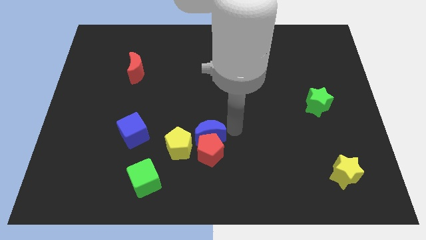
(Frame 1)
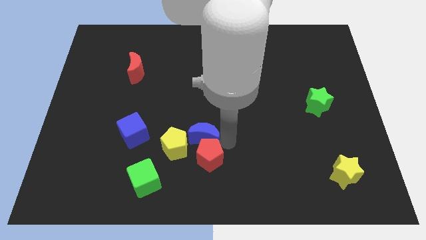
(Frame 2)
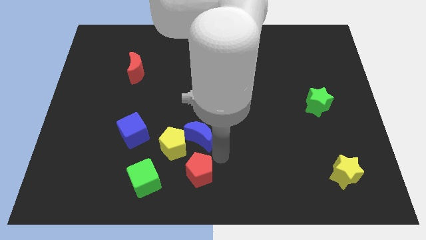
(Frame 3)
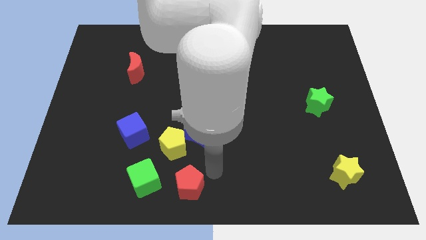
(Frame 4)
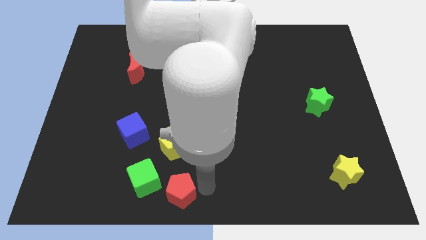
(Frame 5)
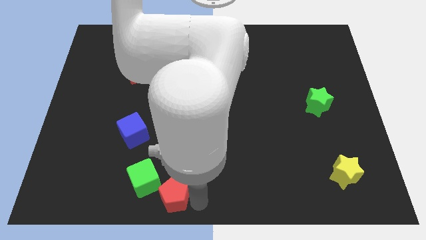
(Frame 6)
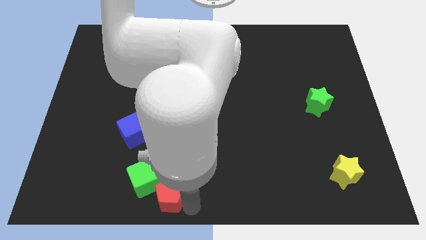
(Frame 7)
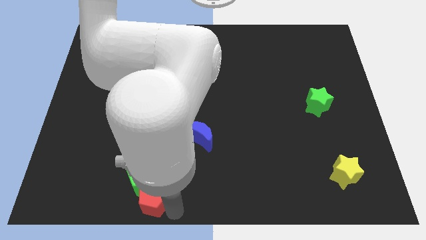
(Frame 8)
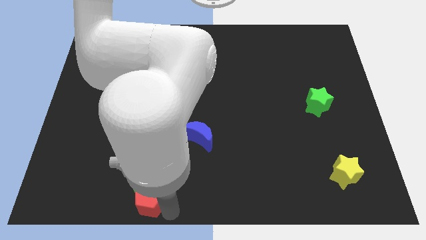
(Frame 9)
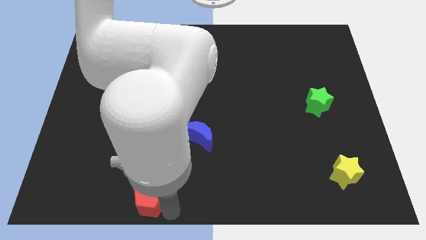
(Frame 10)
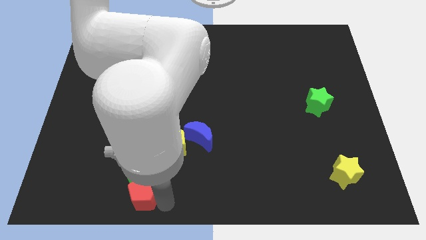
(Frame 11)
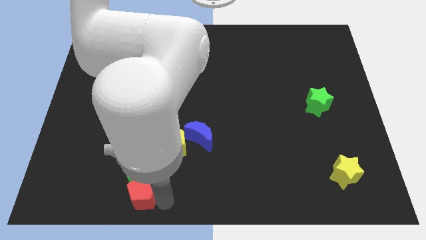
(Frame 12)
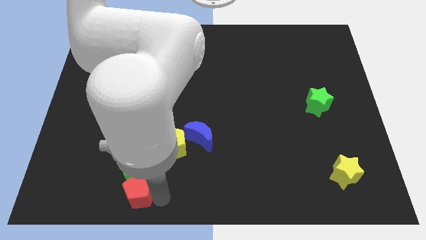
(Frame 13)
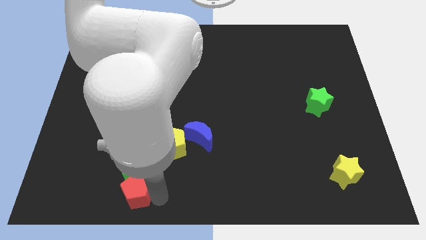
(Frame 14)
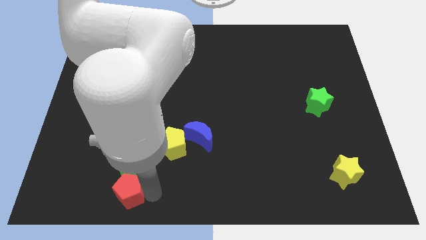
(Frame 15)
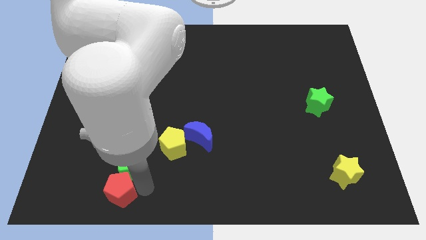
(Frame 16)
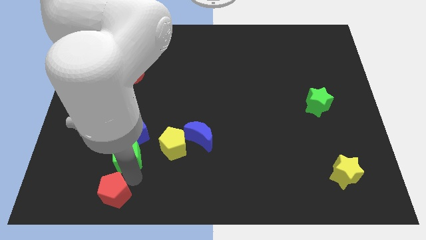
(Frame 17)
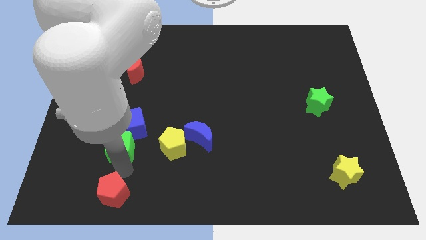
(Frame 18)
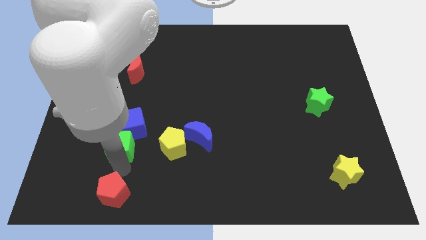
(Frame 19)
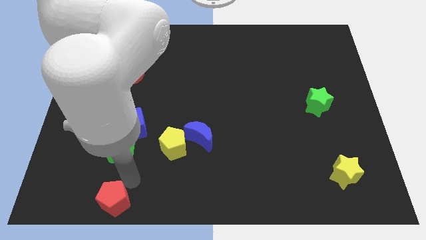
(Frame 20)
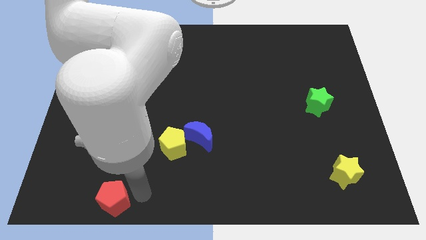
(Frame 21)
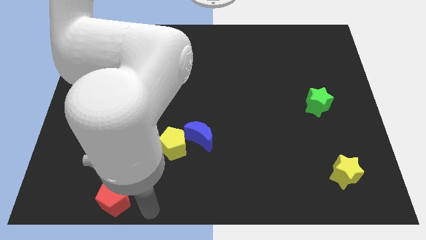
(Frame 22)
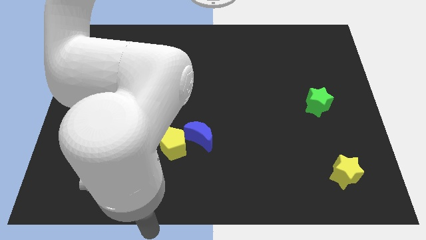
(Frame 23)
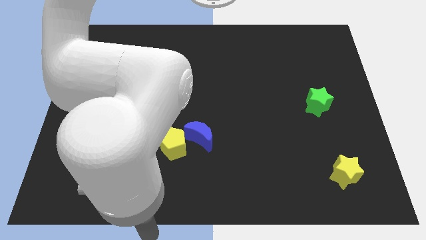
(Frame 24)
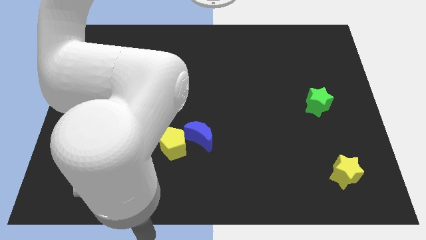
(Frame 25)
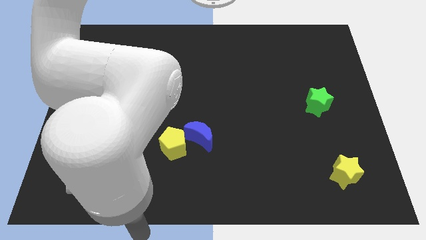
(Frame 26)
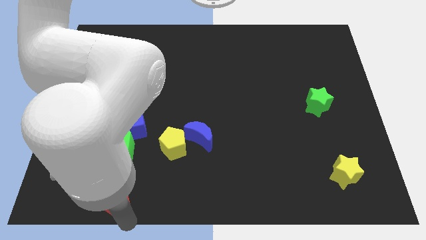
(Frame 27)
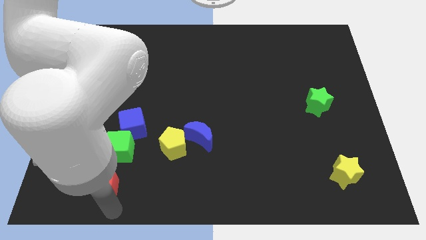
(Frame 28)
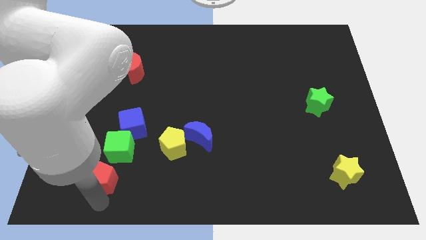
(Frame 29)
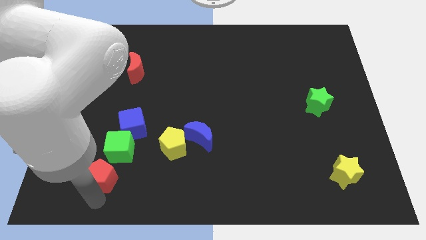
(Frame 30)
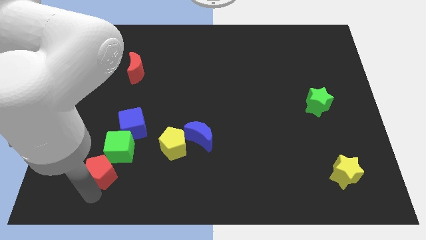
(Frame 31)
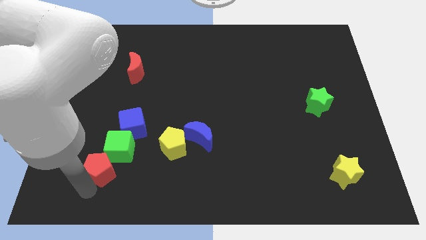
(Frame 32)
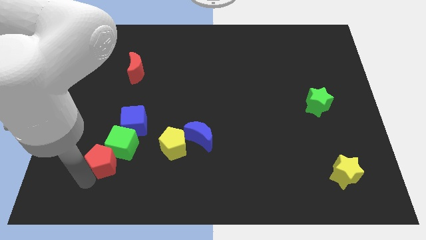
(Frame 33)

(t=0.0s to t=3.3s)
drag red pentagon towards green cube

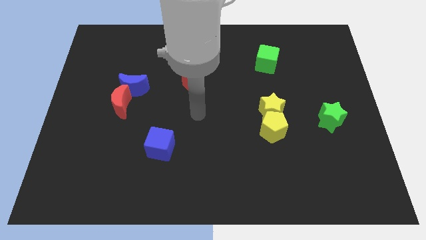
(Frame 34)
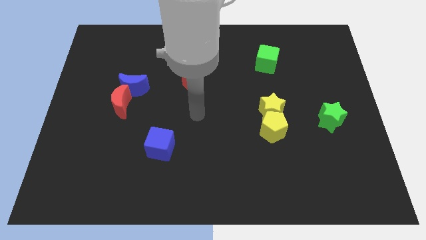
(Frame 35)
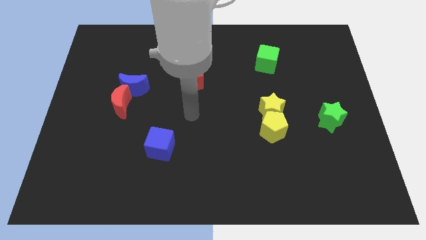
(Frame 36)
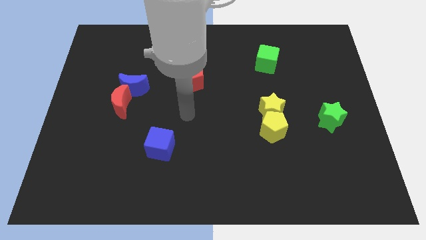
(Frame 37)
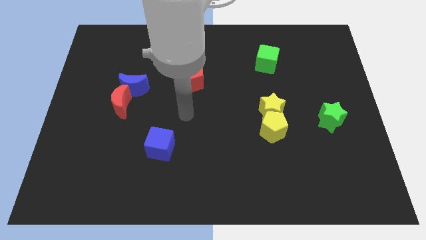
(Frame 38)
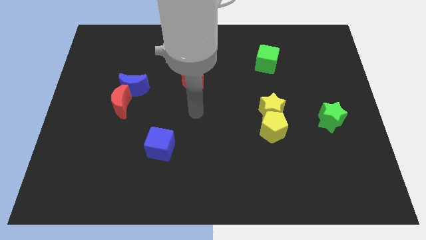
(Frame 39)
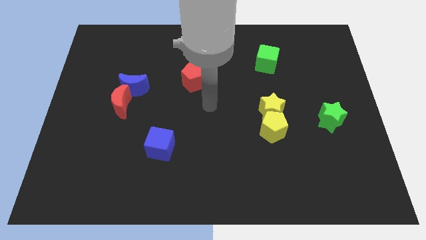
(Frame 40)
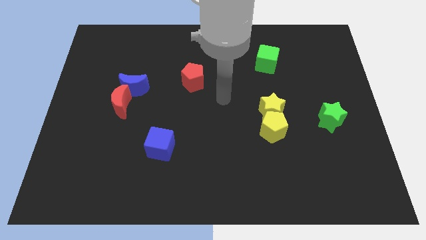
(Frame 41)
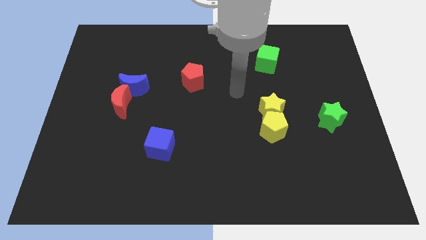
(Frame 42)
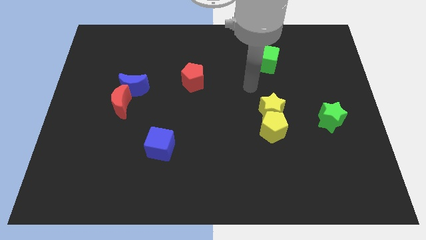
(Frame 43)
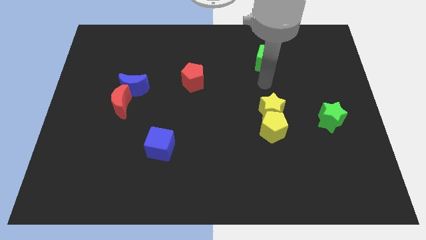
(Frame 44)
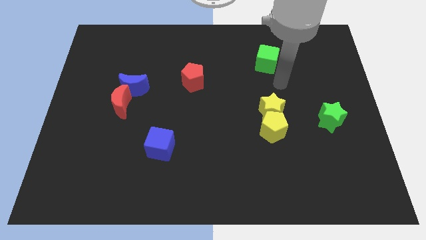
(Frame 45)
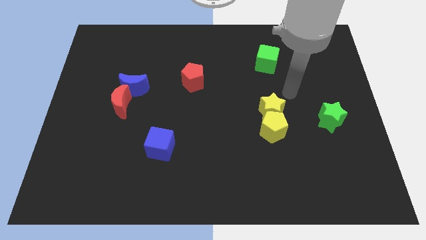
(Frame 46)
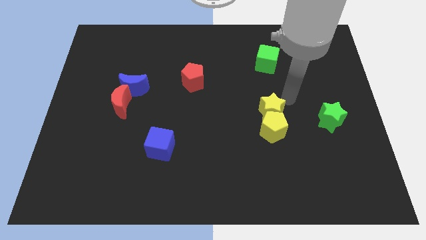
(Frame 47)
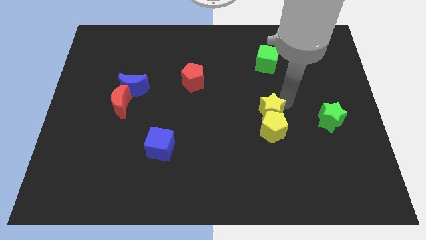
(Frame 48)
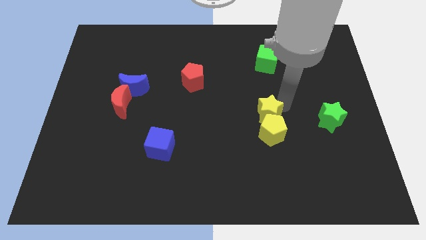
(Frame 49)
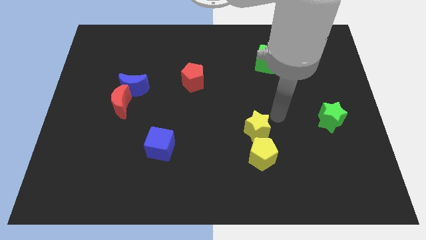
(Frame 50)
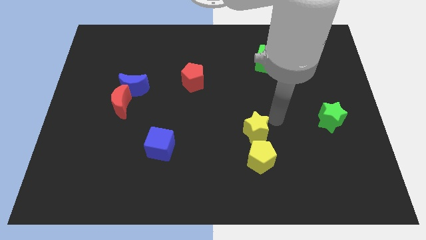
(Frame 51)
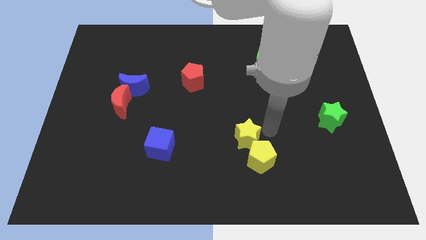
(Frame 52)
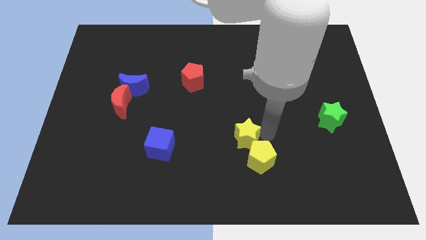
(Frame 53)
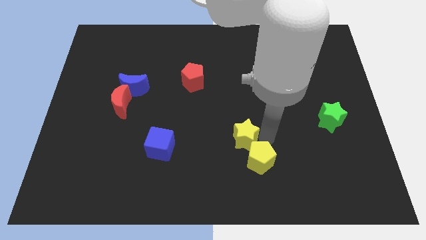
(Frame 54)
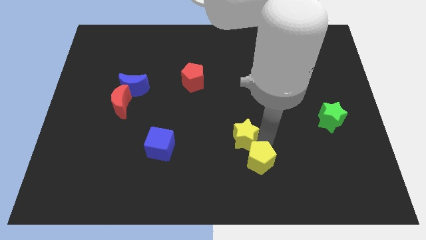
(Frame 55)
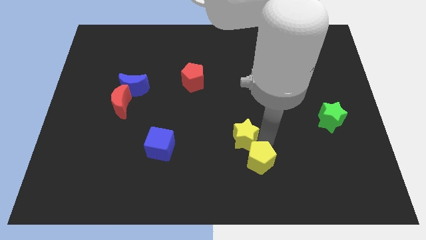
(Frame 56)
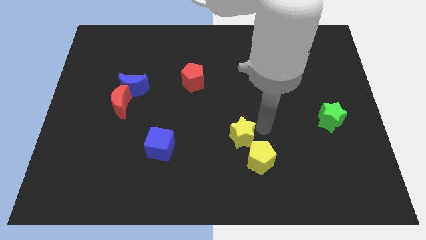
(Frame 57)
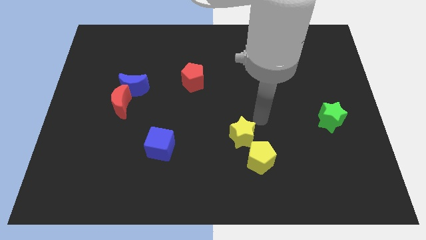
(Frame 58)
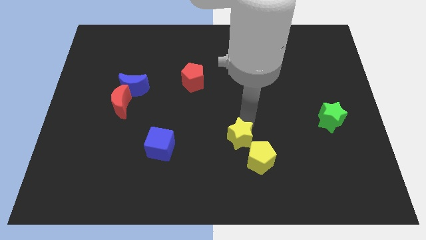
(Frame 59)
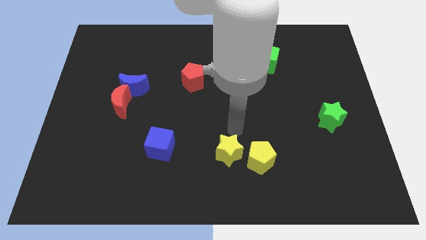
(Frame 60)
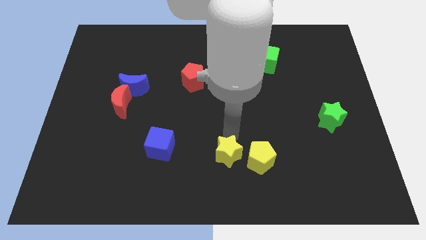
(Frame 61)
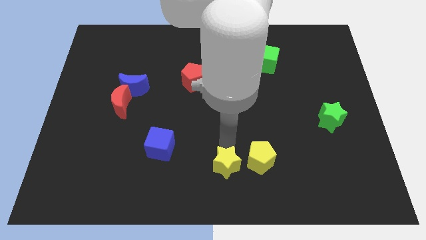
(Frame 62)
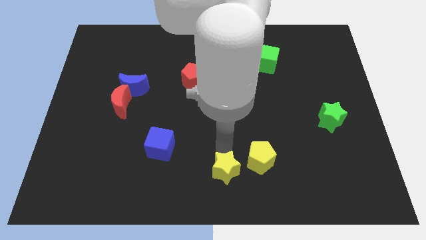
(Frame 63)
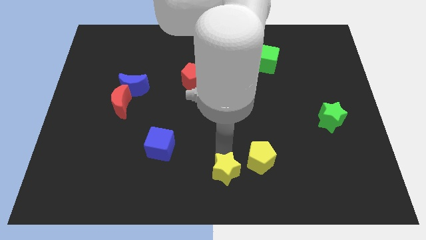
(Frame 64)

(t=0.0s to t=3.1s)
push yellow star beside yellow pentagon

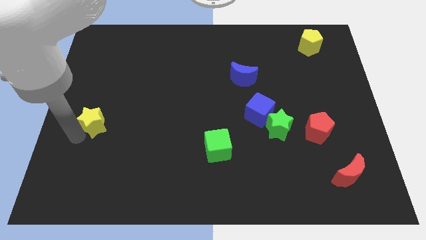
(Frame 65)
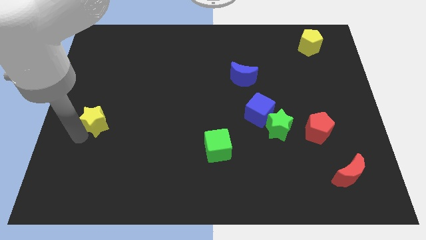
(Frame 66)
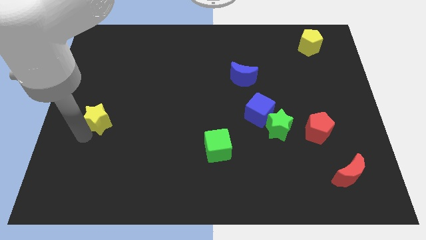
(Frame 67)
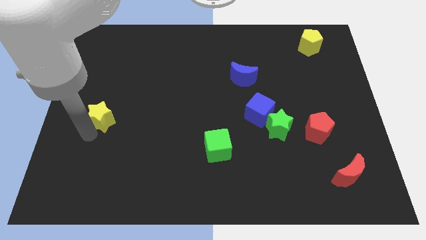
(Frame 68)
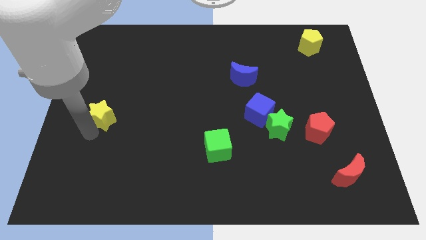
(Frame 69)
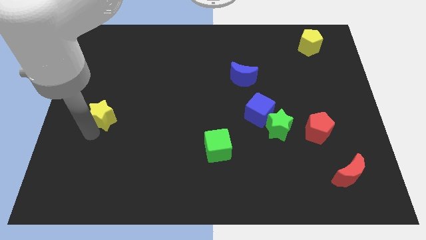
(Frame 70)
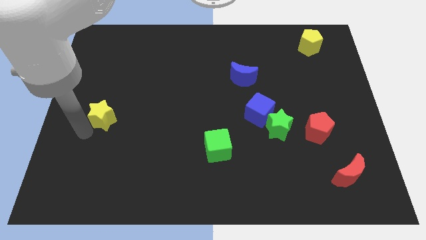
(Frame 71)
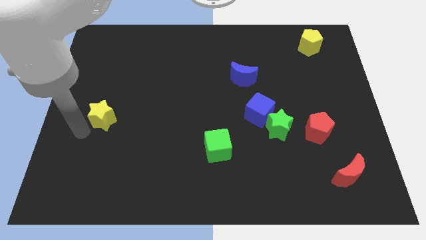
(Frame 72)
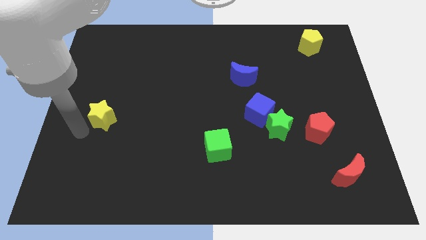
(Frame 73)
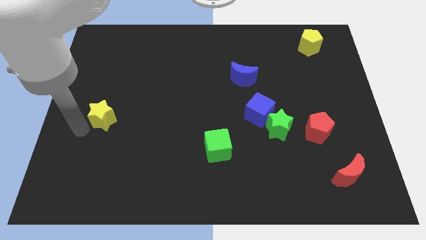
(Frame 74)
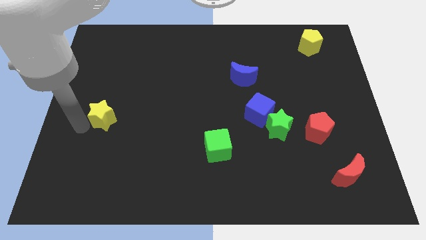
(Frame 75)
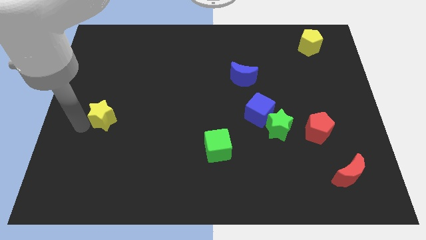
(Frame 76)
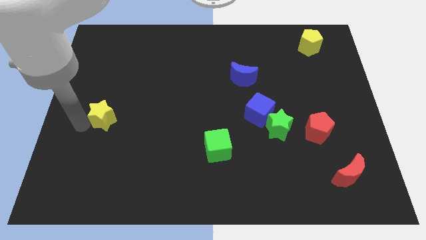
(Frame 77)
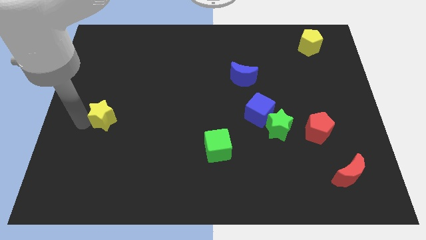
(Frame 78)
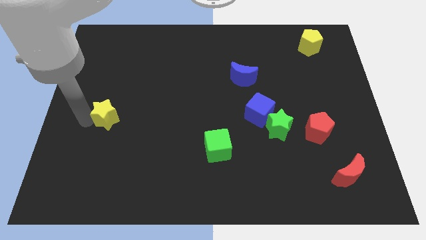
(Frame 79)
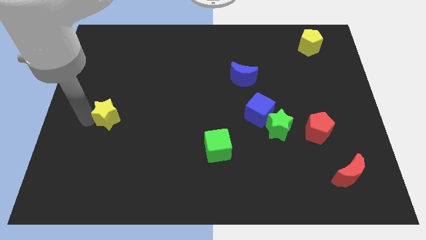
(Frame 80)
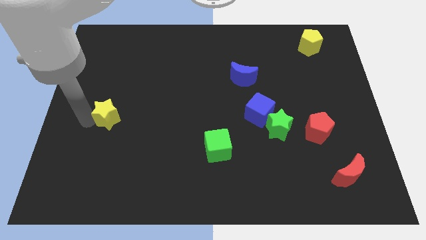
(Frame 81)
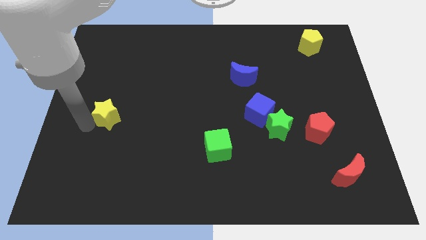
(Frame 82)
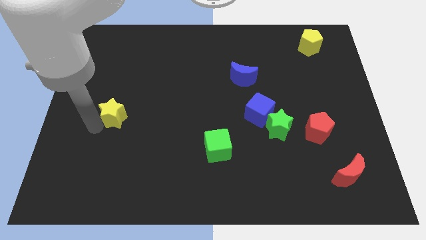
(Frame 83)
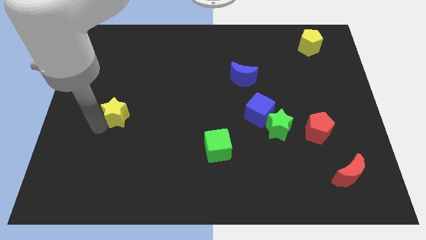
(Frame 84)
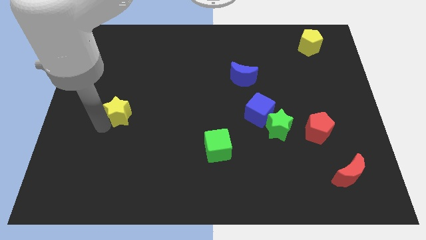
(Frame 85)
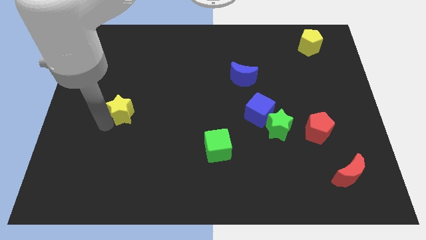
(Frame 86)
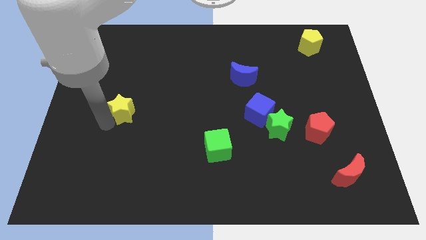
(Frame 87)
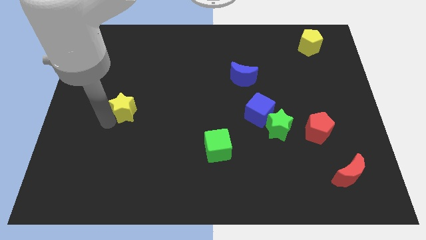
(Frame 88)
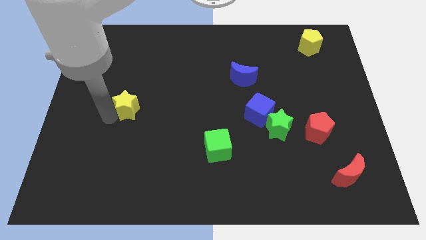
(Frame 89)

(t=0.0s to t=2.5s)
move the yellow star towards the center
